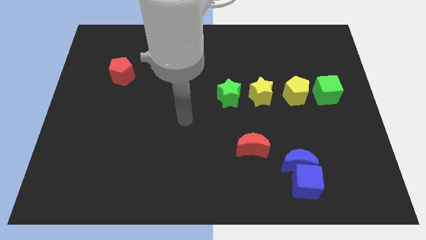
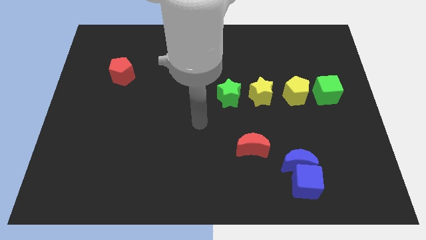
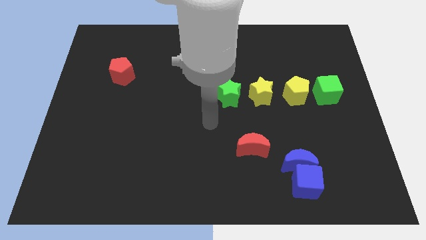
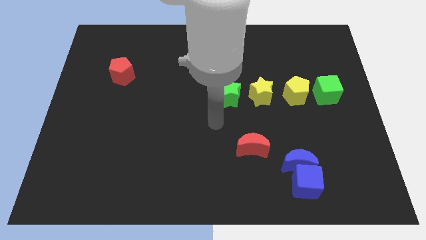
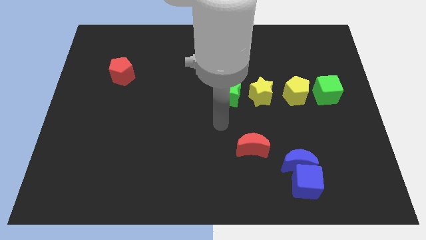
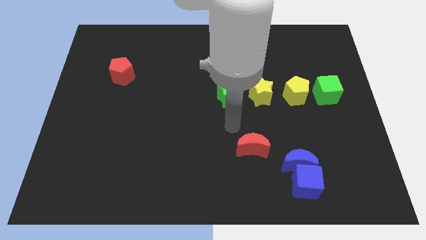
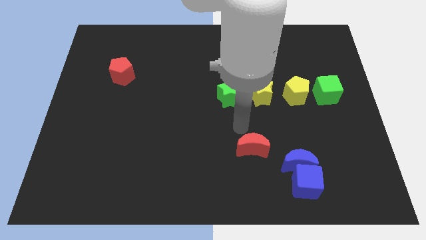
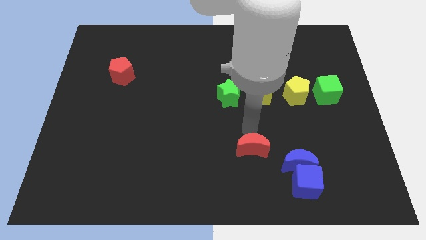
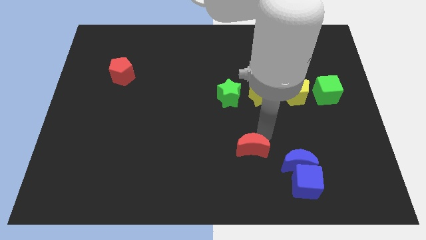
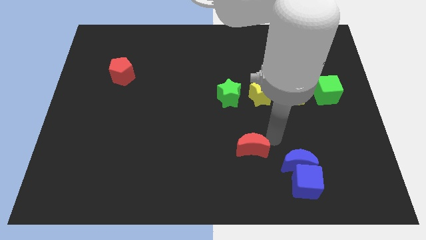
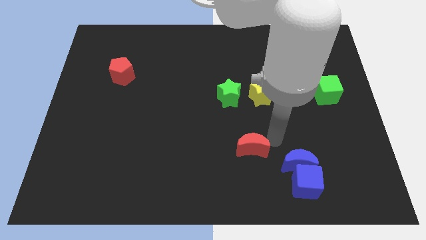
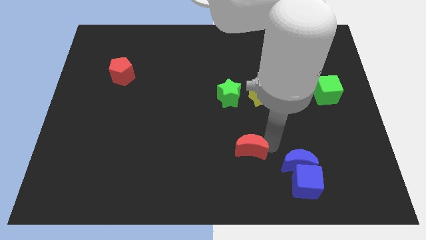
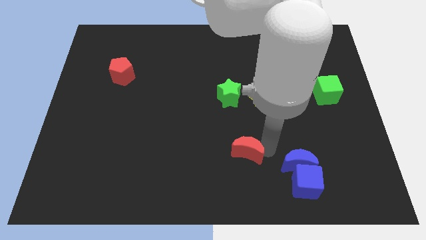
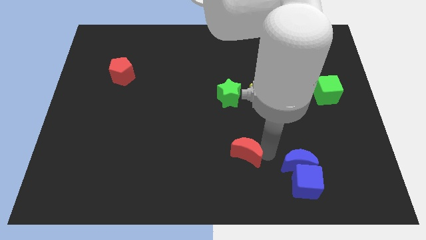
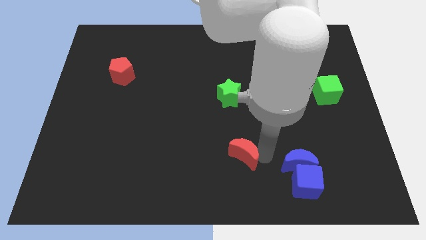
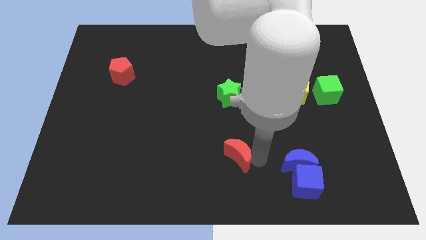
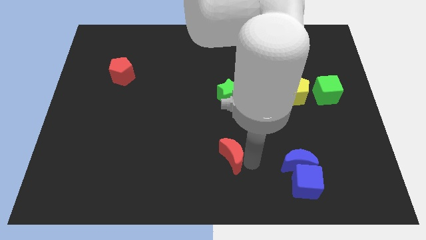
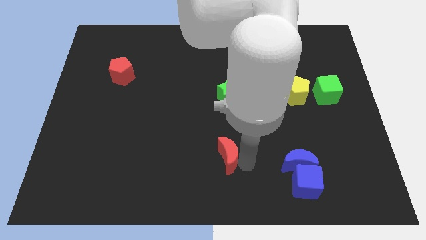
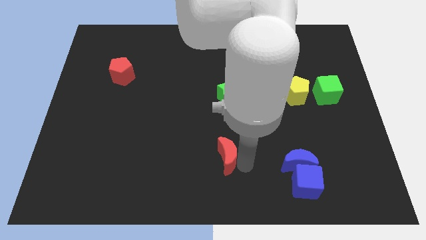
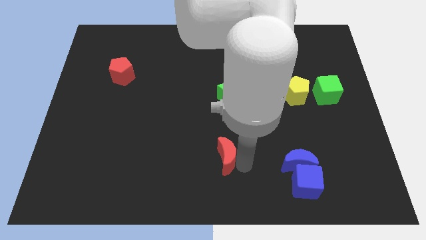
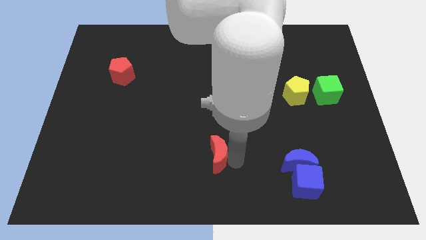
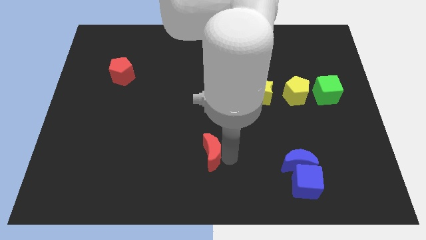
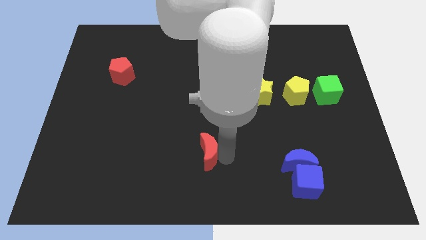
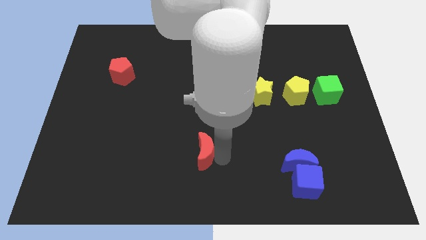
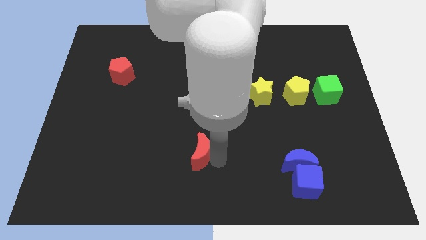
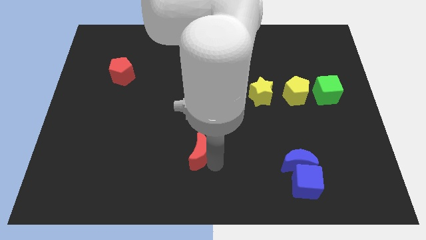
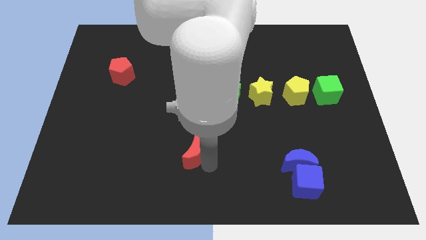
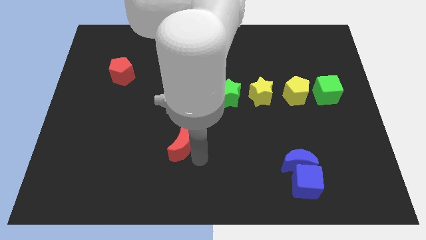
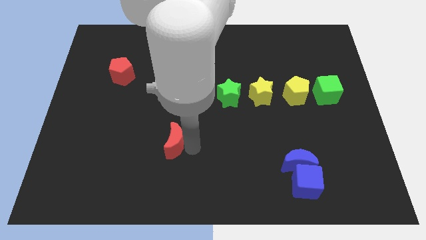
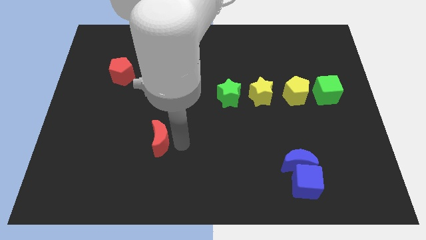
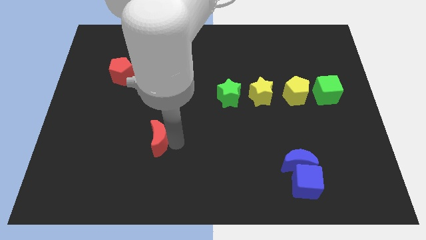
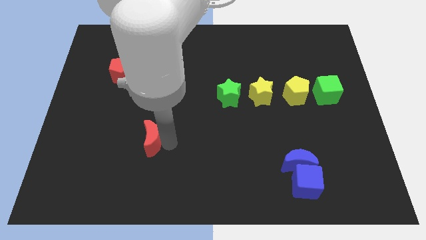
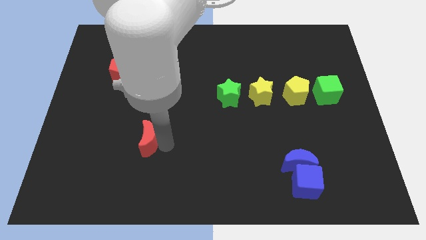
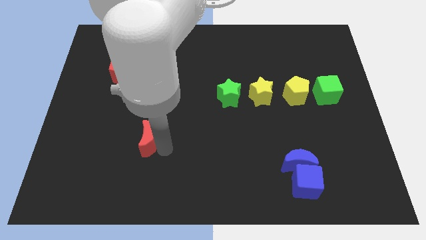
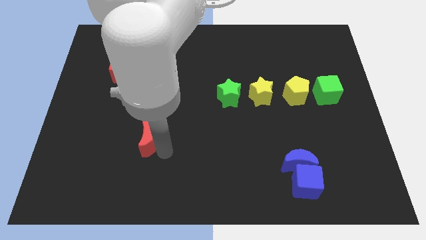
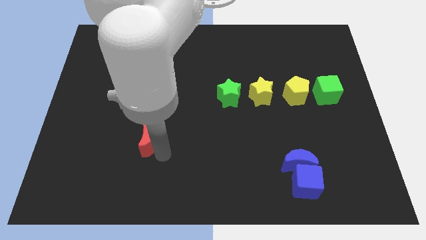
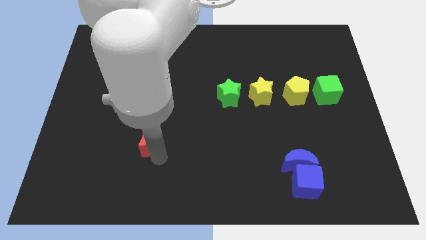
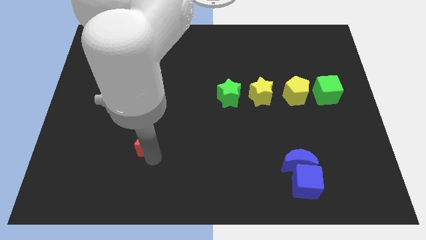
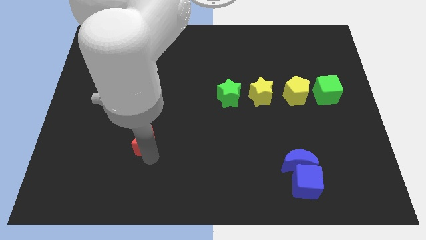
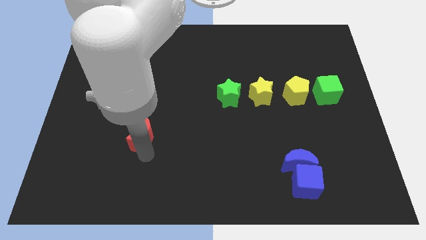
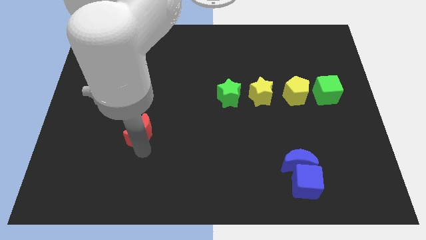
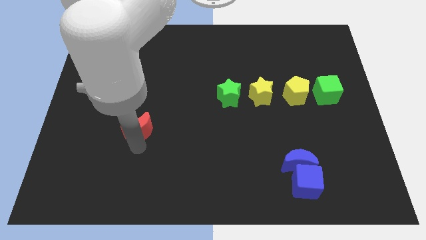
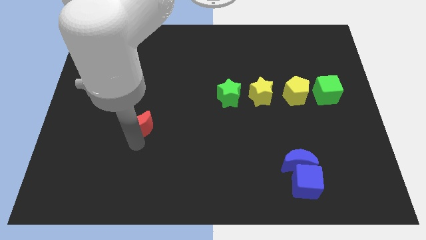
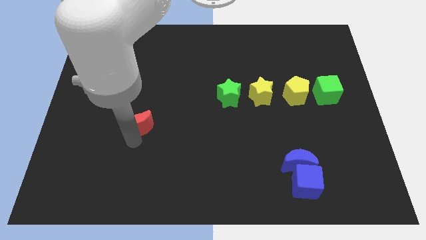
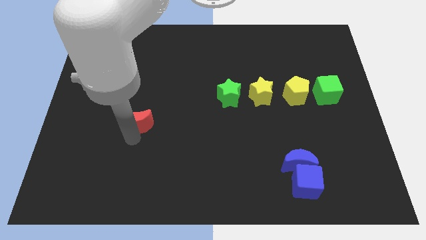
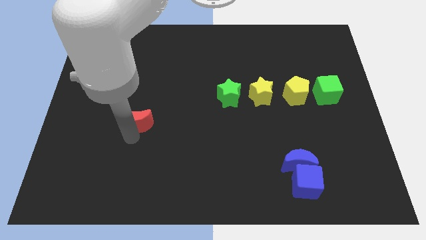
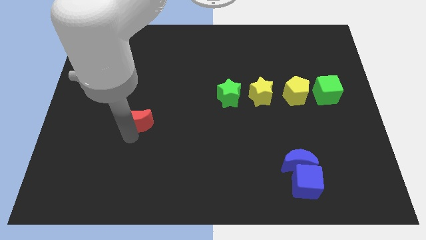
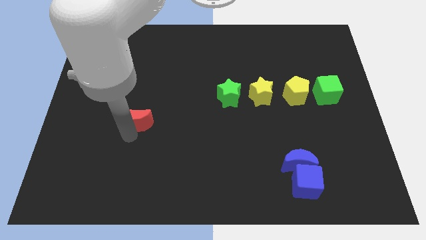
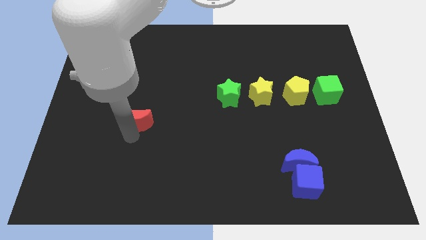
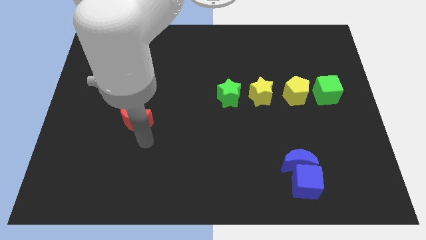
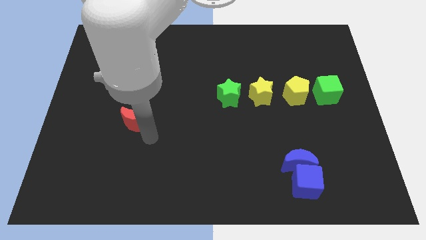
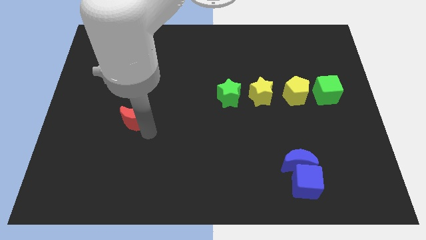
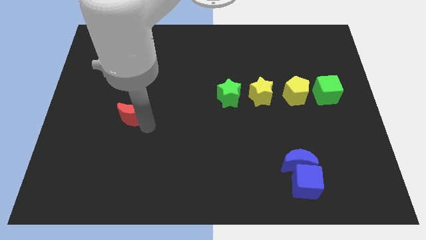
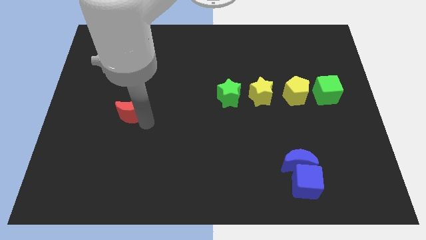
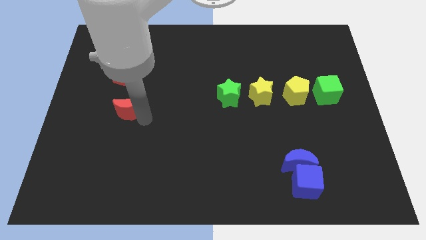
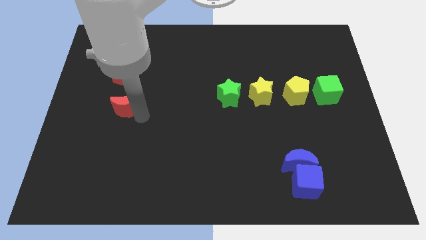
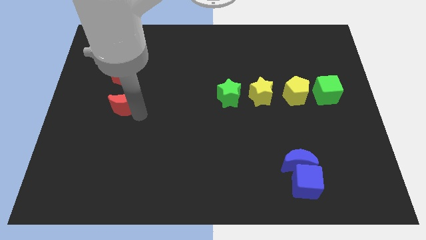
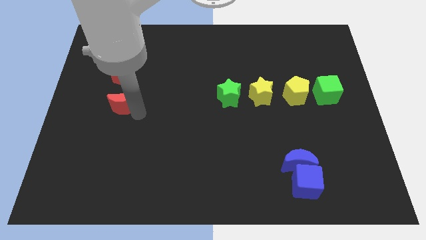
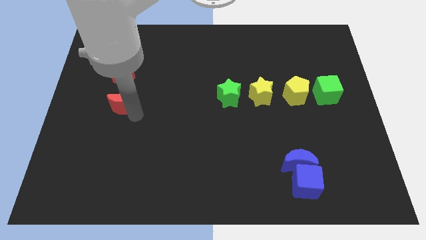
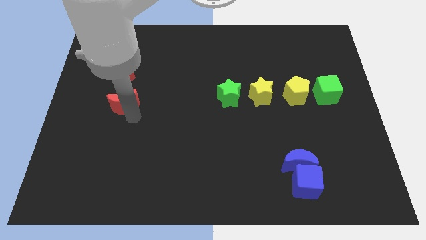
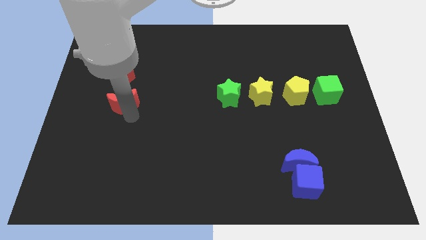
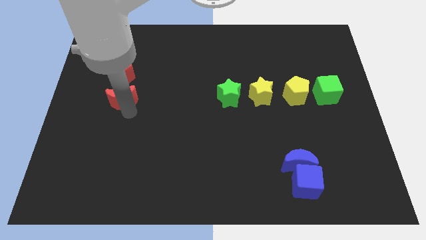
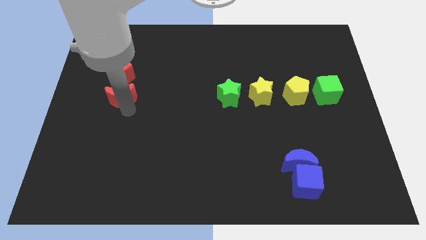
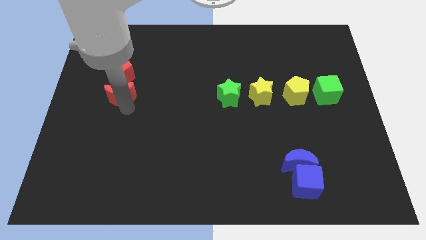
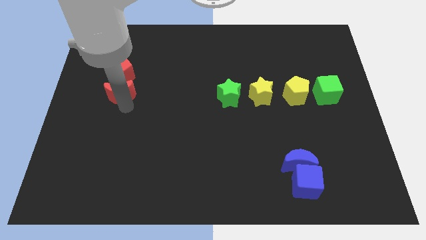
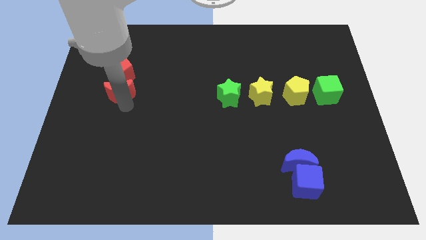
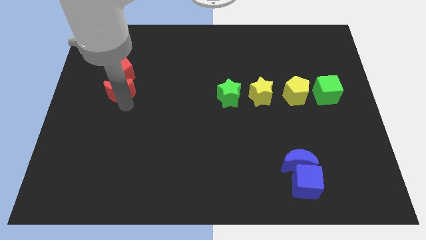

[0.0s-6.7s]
place the red moon below the red pentagon

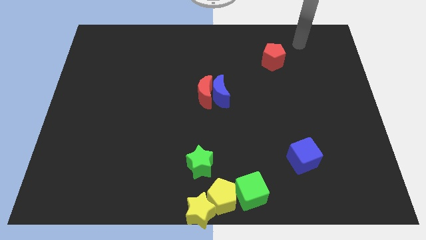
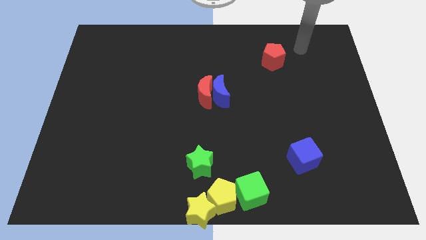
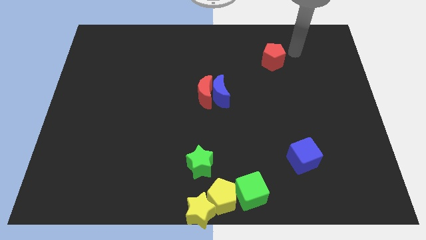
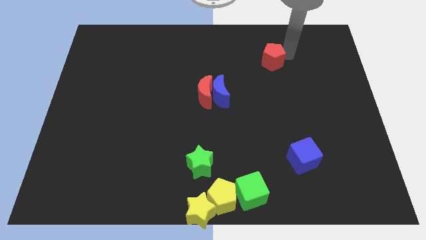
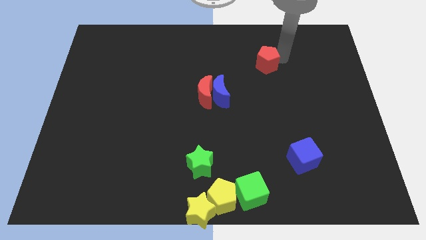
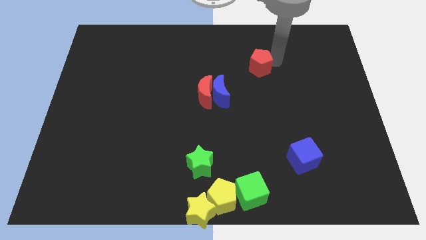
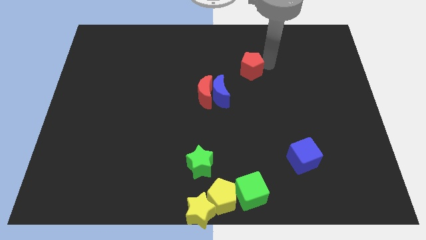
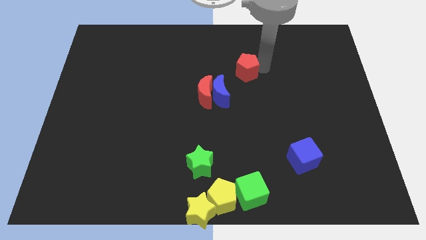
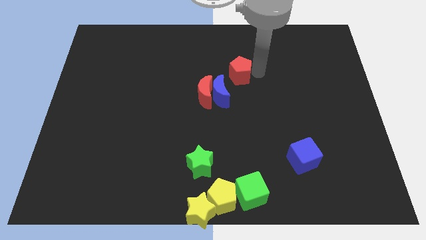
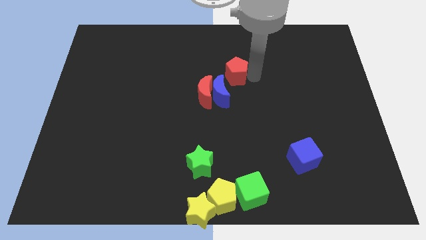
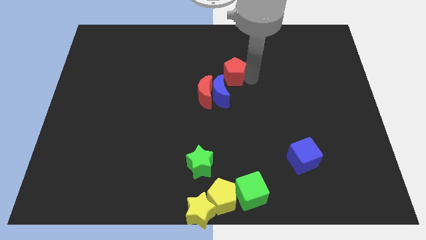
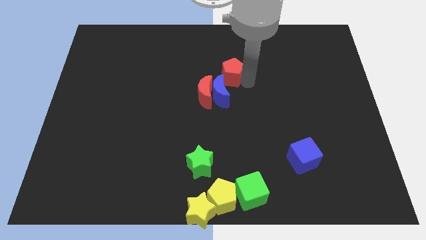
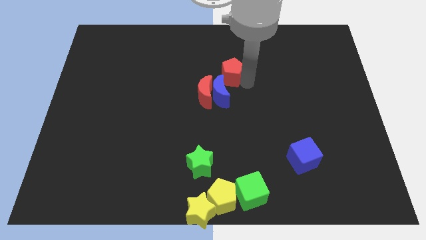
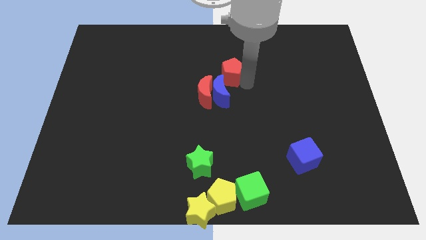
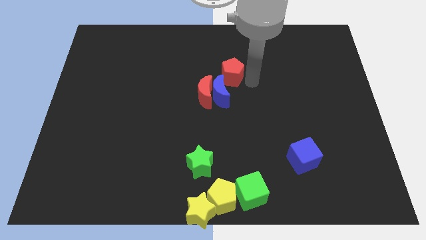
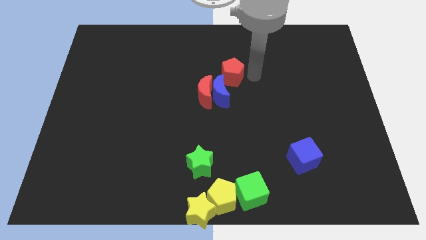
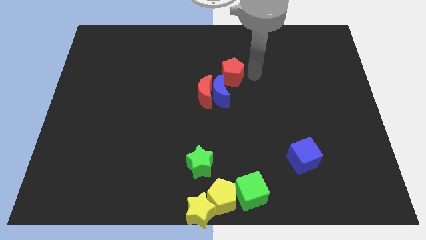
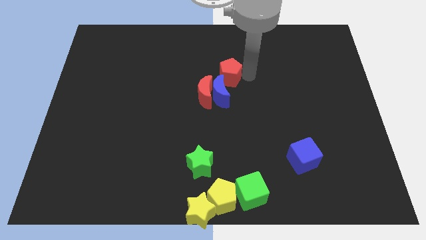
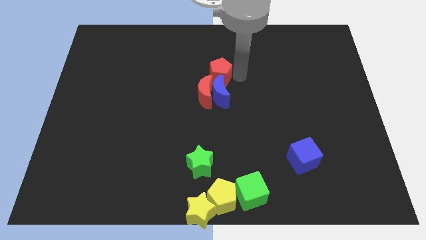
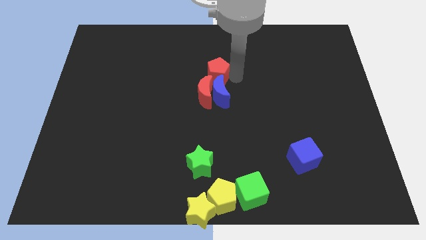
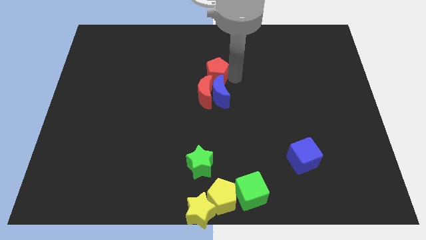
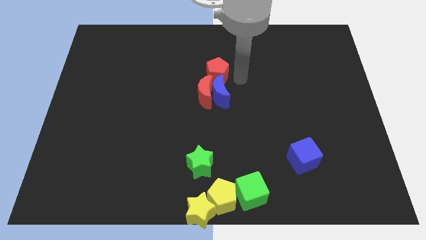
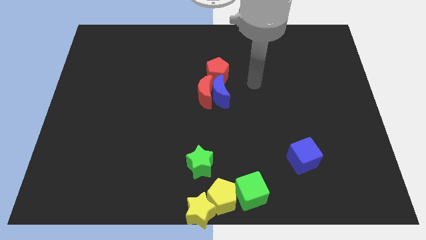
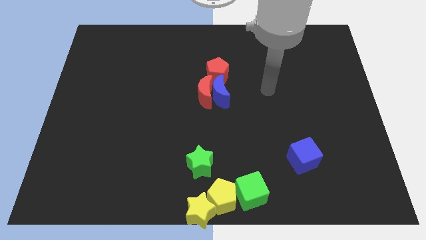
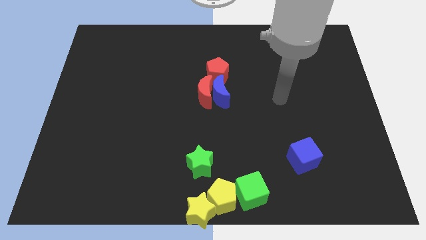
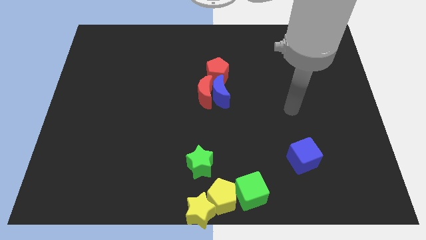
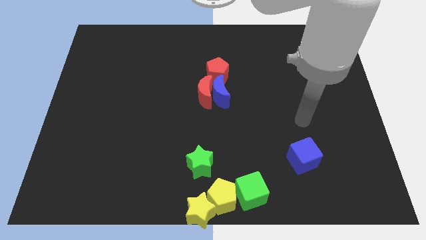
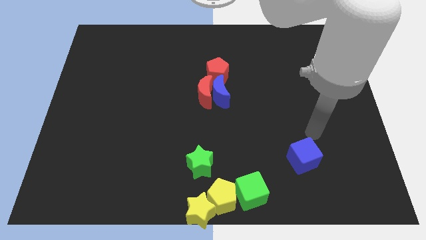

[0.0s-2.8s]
place red pentagon above blue crescent
